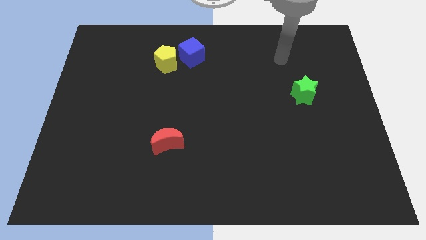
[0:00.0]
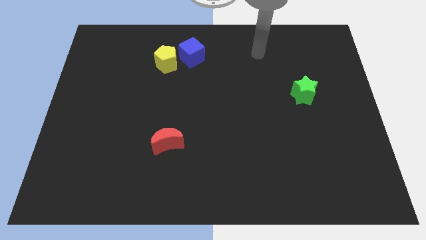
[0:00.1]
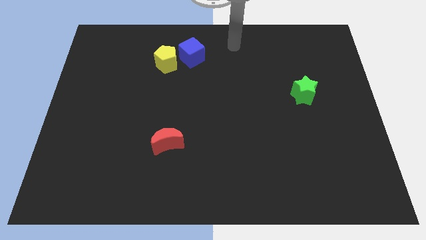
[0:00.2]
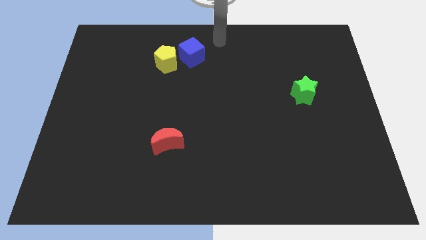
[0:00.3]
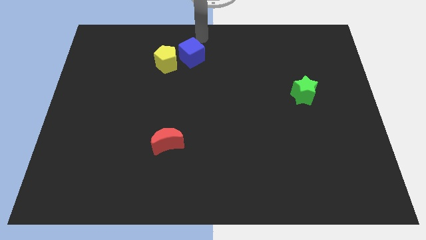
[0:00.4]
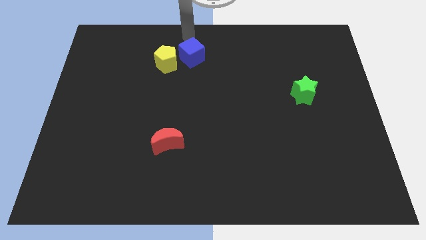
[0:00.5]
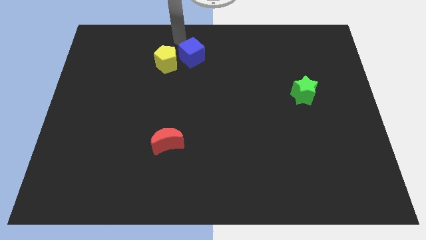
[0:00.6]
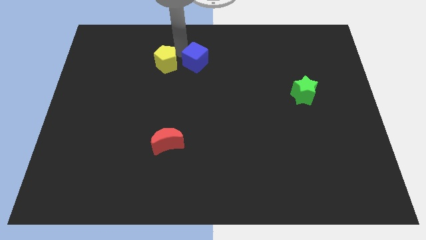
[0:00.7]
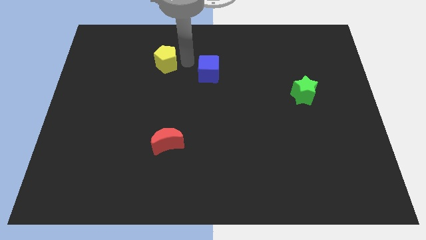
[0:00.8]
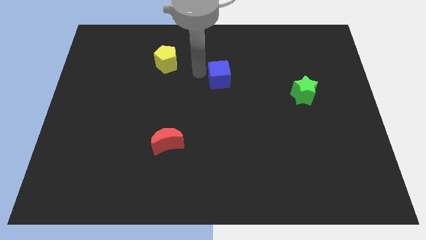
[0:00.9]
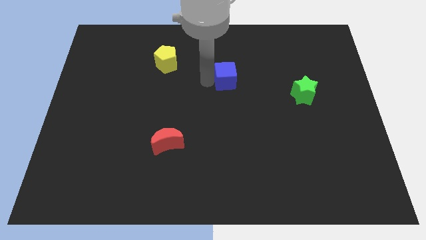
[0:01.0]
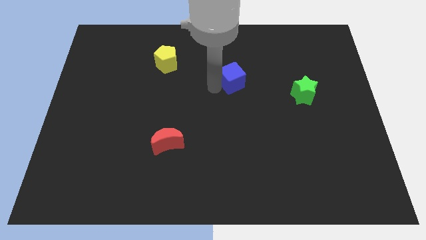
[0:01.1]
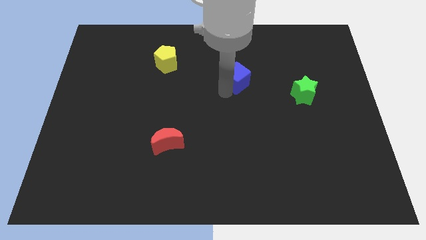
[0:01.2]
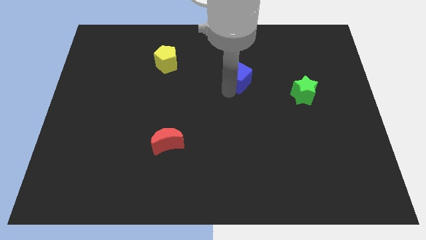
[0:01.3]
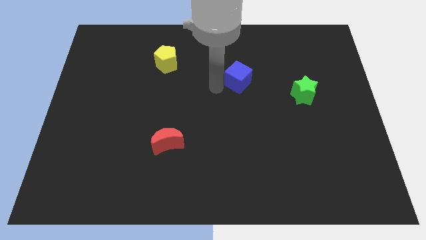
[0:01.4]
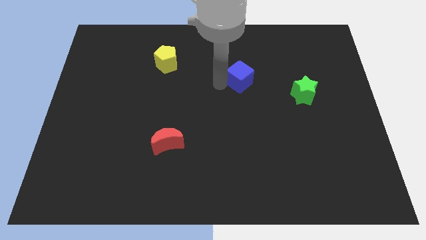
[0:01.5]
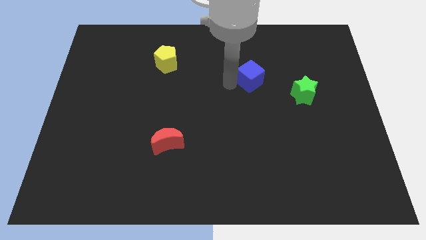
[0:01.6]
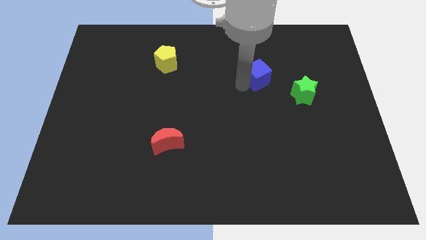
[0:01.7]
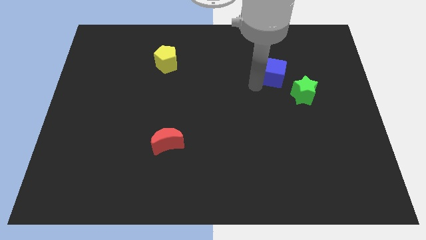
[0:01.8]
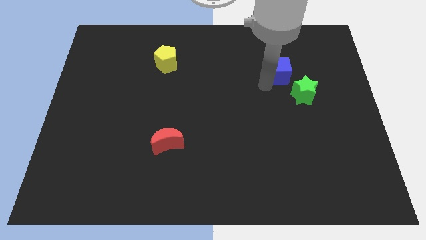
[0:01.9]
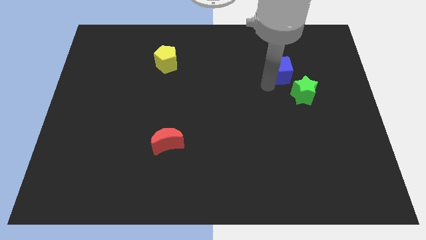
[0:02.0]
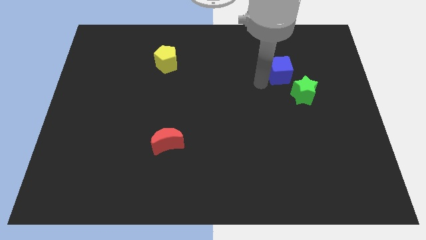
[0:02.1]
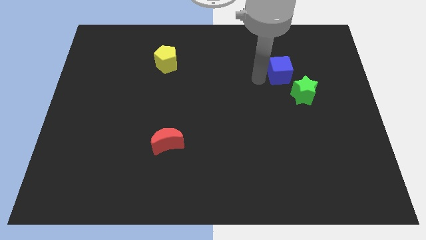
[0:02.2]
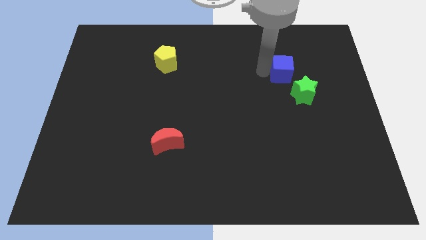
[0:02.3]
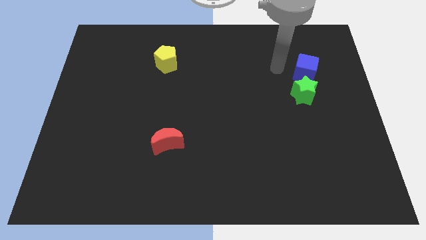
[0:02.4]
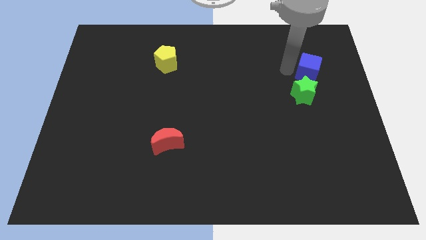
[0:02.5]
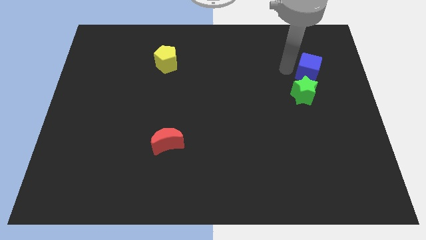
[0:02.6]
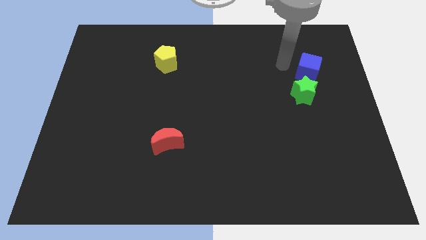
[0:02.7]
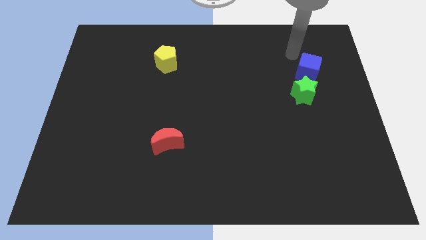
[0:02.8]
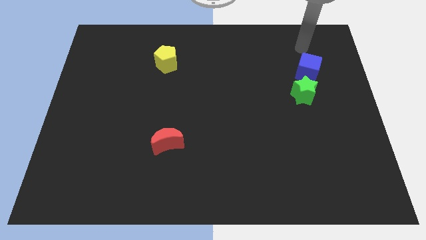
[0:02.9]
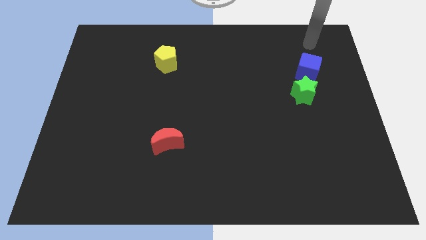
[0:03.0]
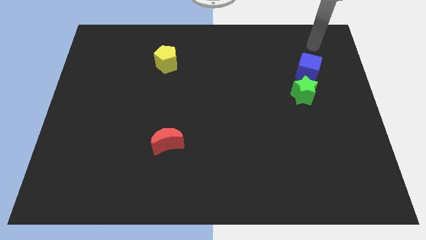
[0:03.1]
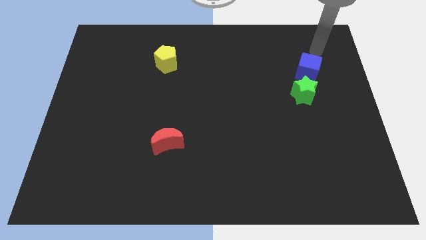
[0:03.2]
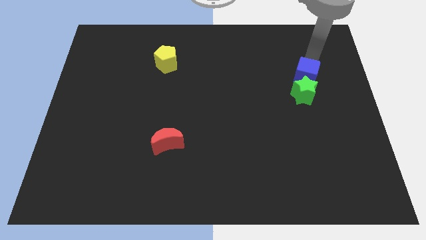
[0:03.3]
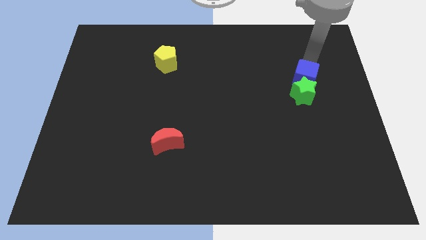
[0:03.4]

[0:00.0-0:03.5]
put the blue block towards the green block

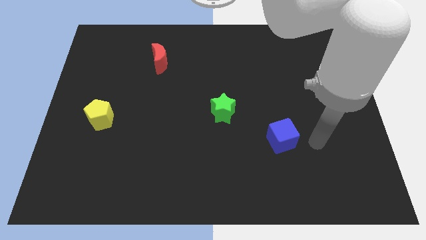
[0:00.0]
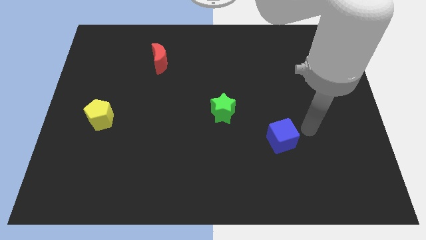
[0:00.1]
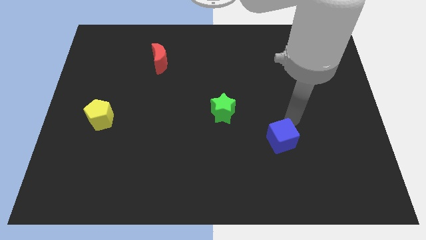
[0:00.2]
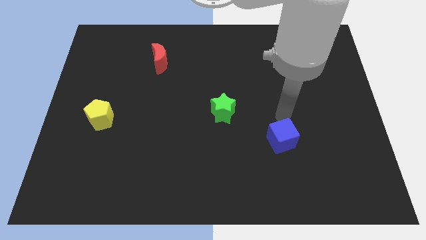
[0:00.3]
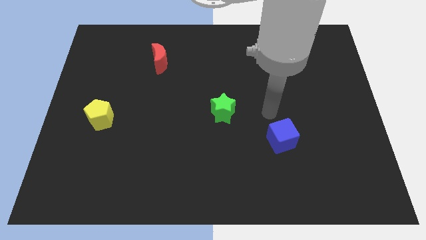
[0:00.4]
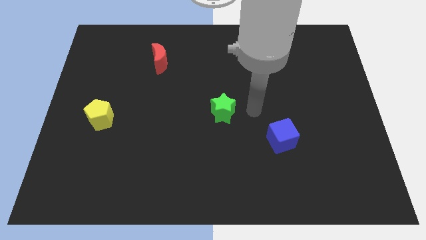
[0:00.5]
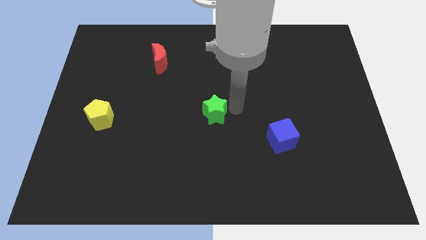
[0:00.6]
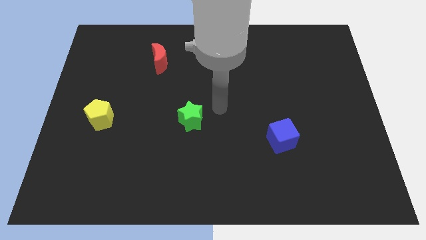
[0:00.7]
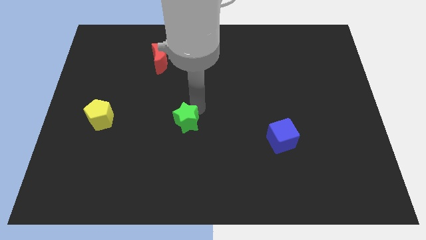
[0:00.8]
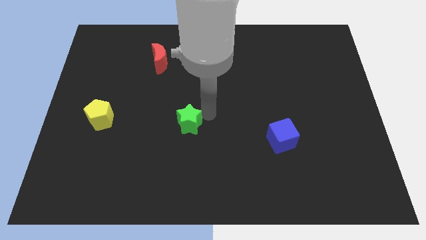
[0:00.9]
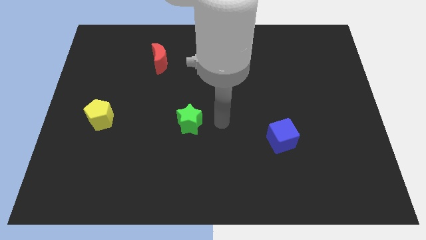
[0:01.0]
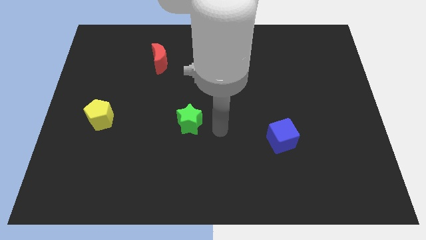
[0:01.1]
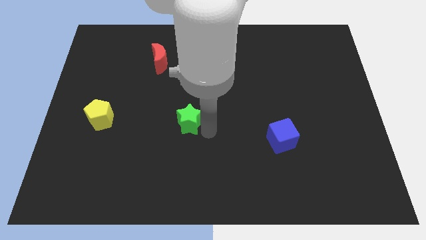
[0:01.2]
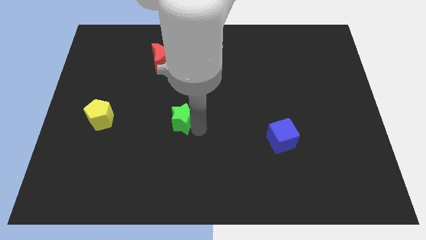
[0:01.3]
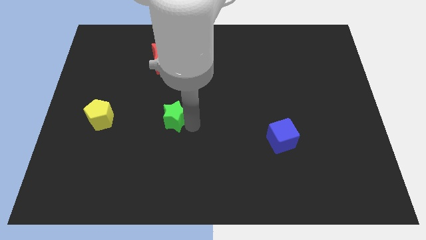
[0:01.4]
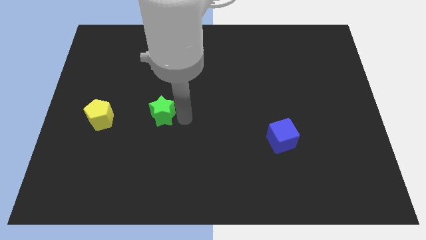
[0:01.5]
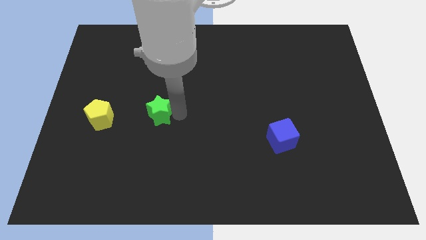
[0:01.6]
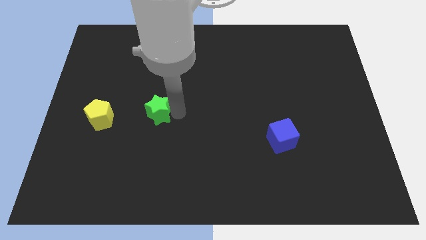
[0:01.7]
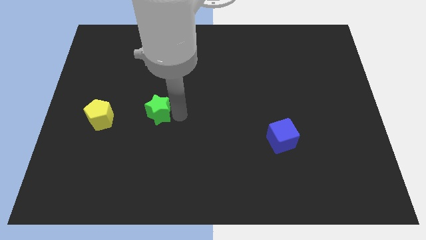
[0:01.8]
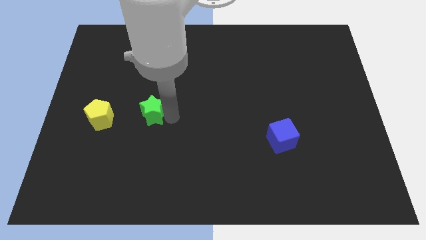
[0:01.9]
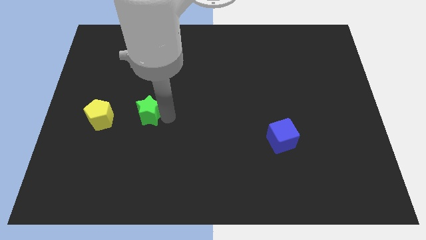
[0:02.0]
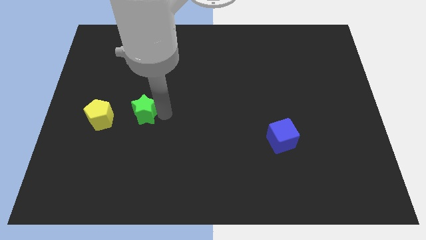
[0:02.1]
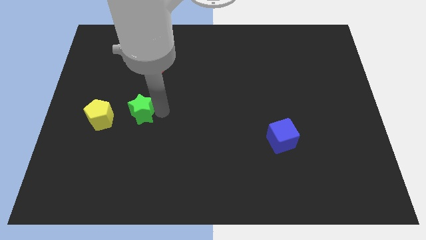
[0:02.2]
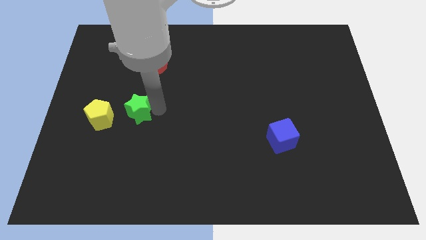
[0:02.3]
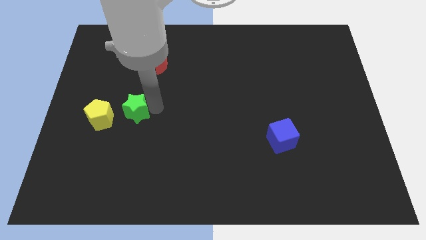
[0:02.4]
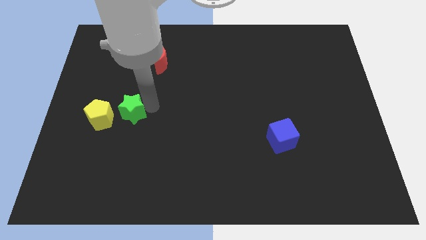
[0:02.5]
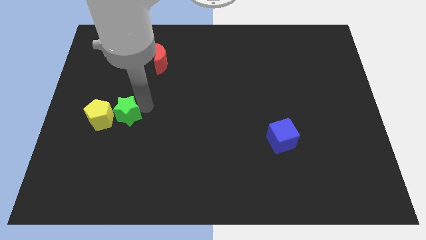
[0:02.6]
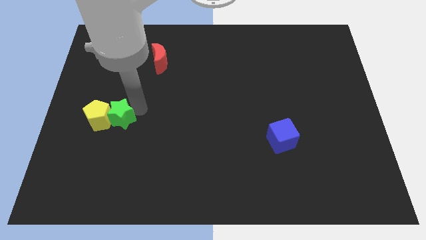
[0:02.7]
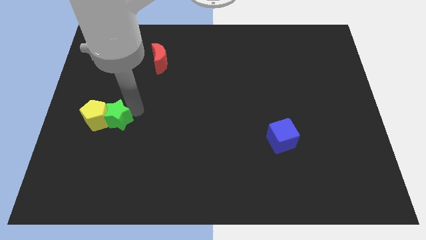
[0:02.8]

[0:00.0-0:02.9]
put the green block next to the yellow block

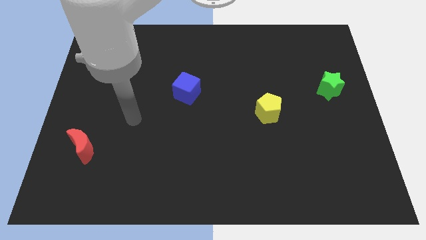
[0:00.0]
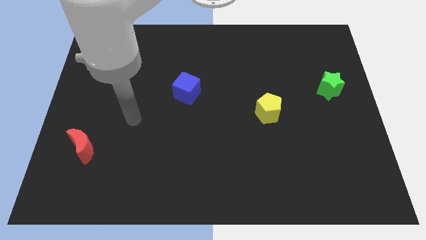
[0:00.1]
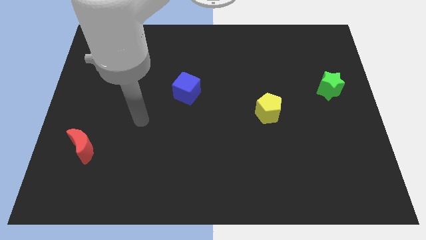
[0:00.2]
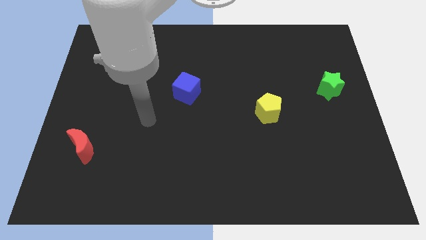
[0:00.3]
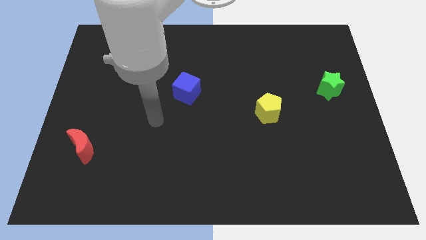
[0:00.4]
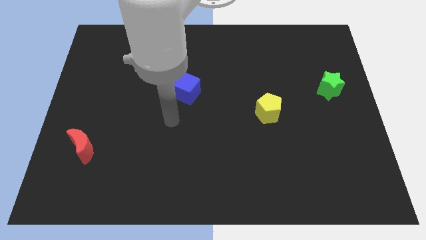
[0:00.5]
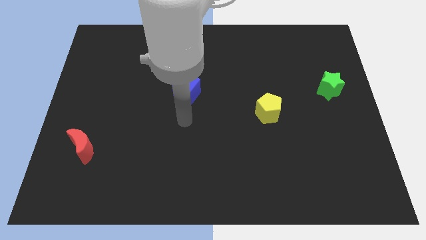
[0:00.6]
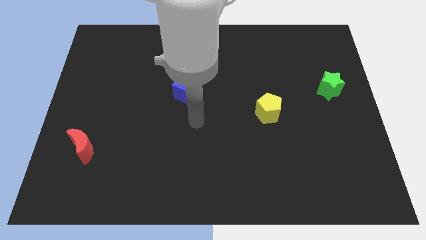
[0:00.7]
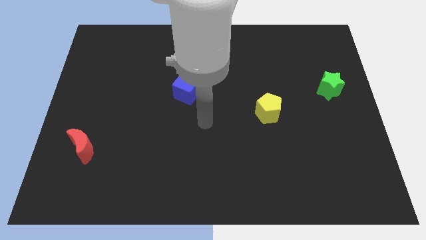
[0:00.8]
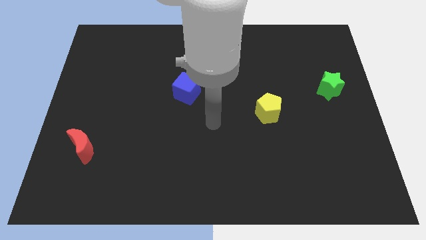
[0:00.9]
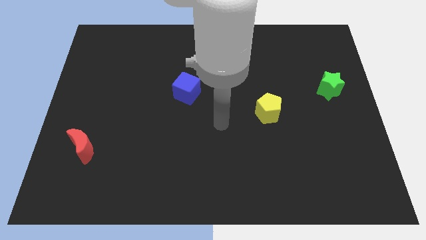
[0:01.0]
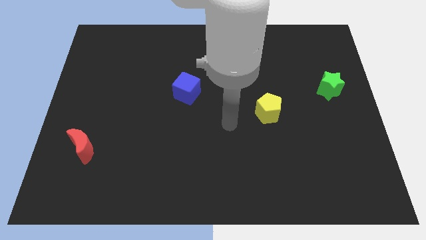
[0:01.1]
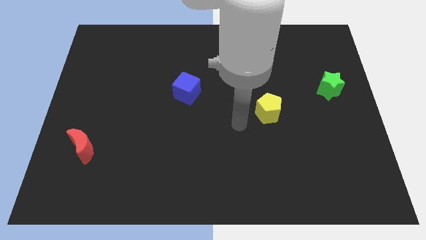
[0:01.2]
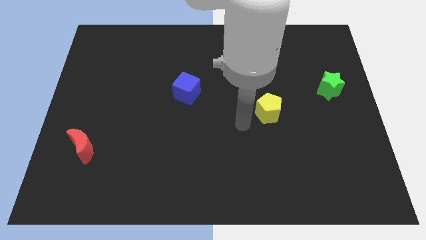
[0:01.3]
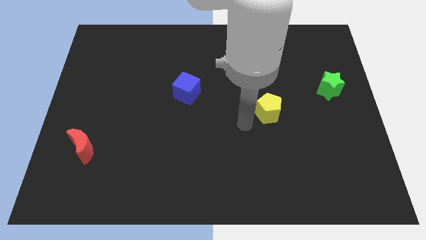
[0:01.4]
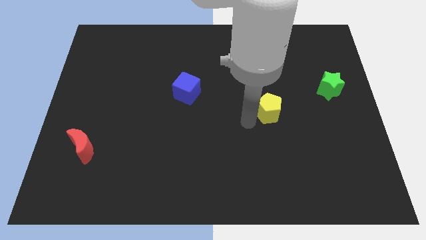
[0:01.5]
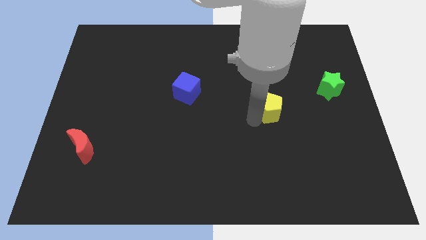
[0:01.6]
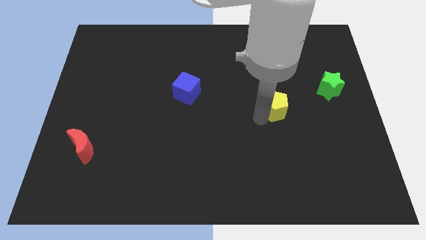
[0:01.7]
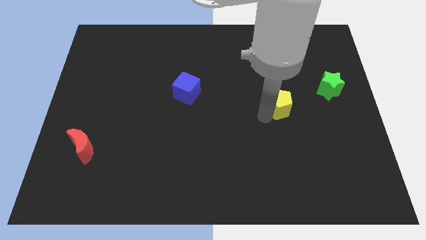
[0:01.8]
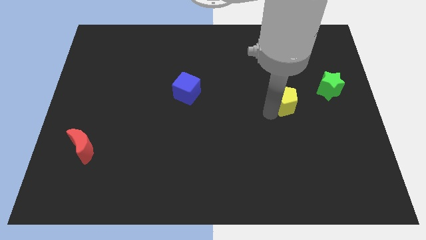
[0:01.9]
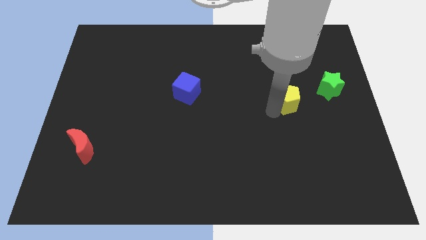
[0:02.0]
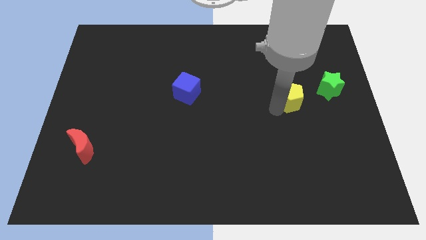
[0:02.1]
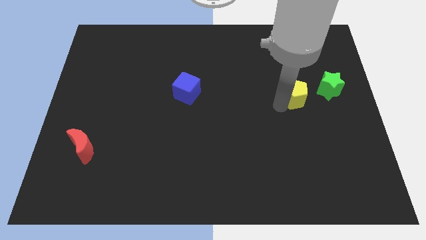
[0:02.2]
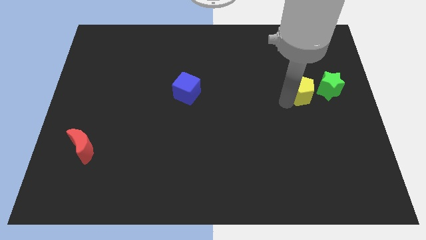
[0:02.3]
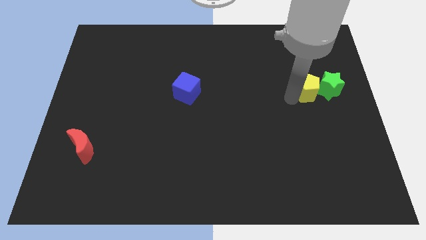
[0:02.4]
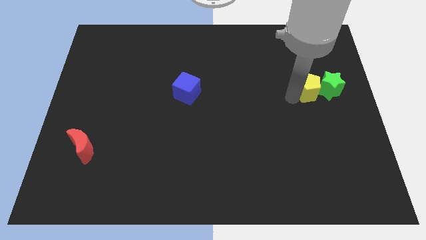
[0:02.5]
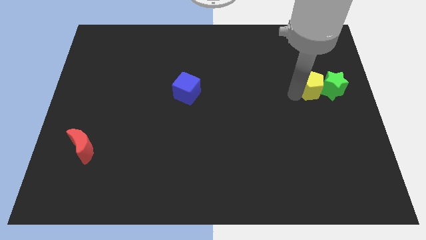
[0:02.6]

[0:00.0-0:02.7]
push the pentagon next to the star
